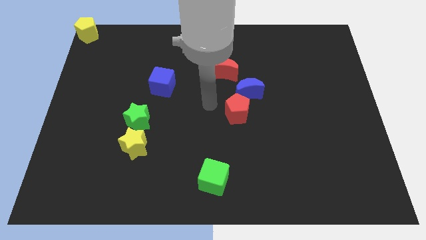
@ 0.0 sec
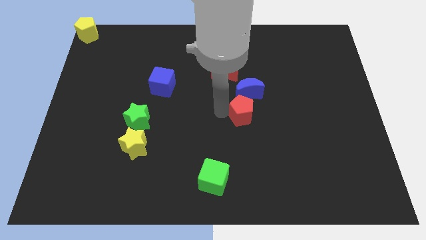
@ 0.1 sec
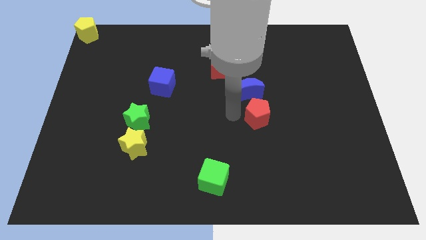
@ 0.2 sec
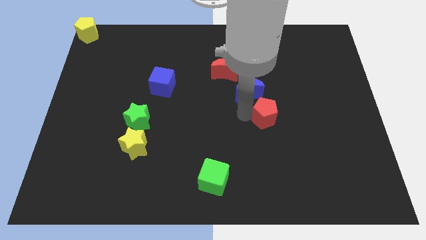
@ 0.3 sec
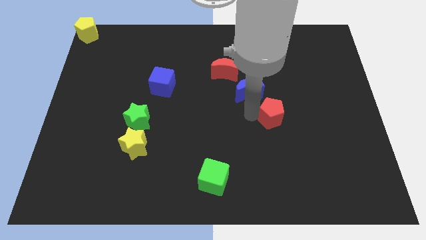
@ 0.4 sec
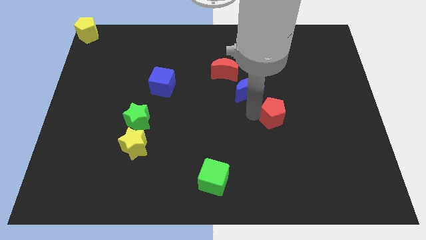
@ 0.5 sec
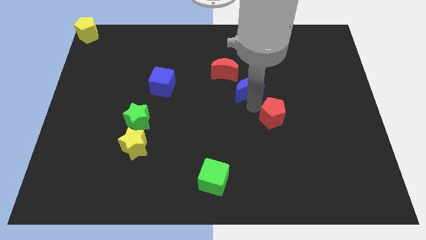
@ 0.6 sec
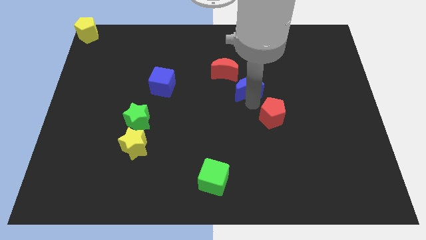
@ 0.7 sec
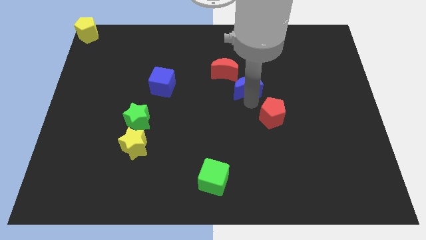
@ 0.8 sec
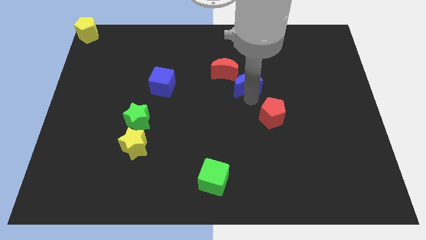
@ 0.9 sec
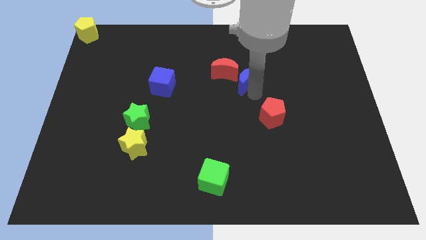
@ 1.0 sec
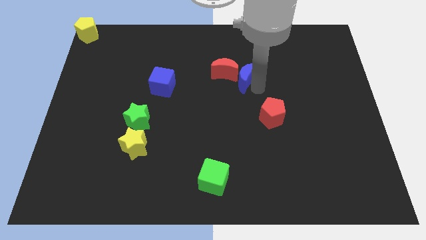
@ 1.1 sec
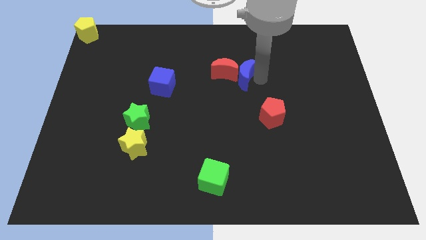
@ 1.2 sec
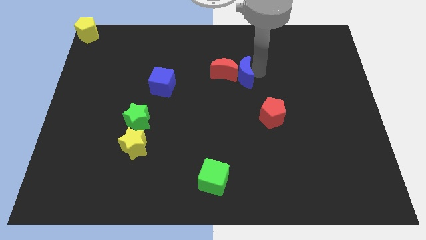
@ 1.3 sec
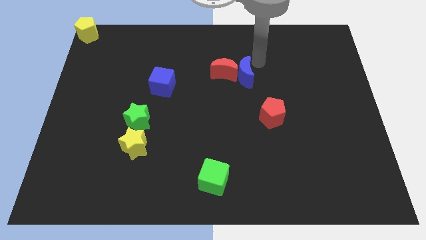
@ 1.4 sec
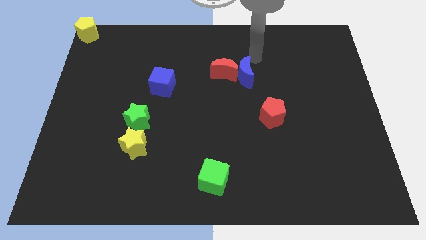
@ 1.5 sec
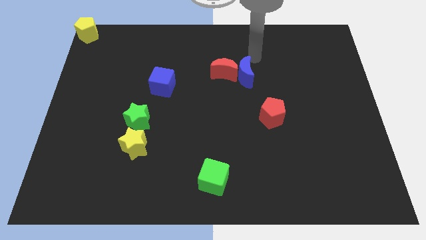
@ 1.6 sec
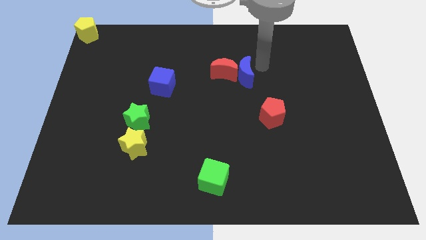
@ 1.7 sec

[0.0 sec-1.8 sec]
push blue crescent slightly towards red crescent

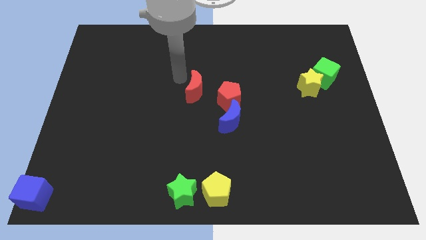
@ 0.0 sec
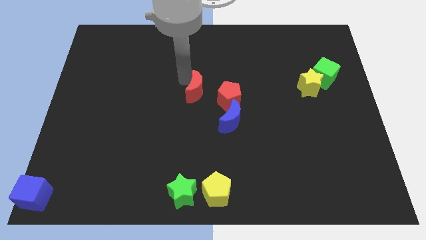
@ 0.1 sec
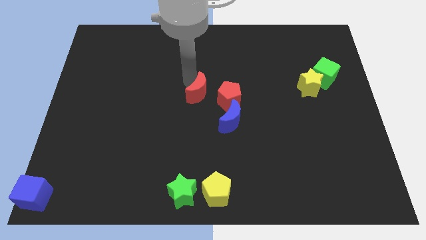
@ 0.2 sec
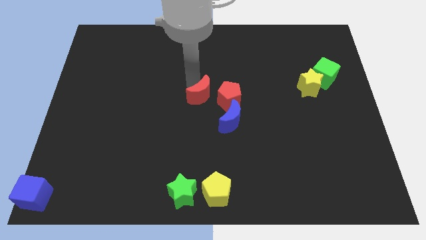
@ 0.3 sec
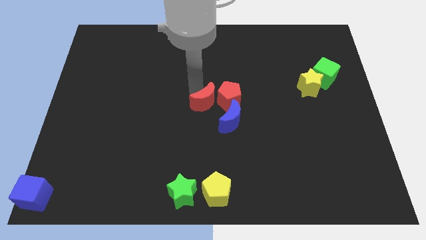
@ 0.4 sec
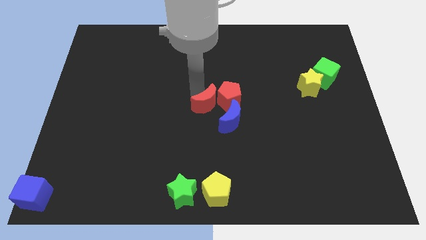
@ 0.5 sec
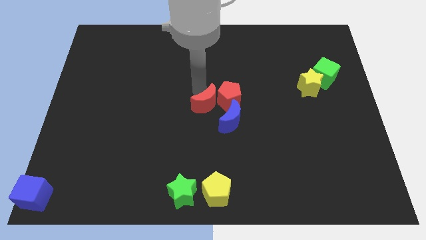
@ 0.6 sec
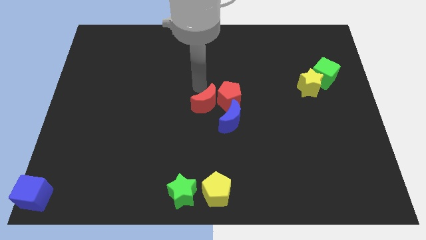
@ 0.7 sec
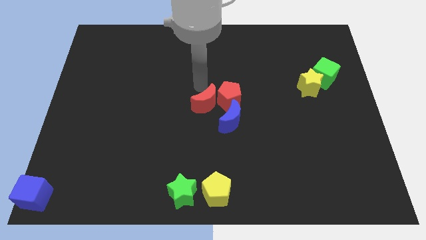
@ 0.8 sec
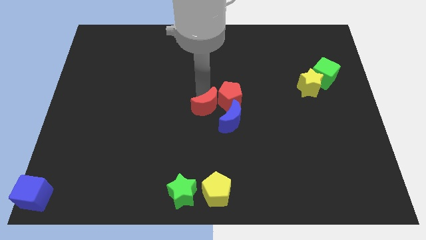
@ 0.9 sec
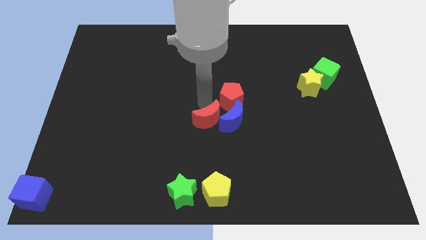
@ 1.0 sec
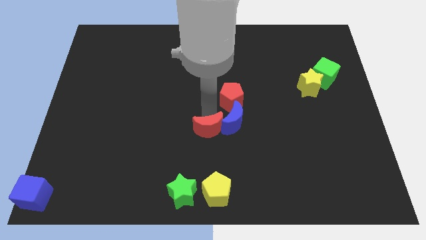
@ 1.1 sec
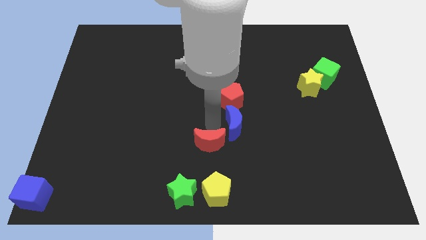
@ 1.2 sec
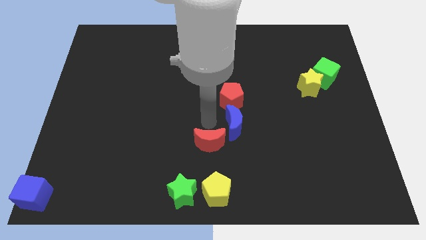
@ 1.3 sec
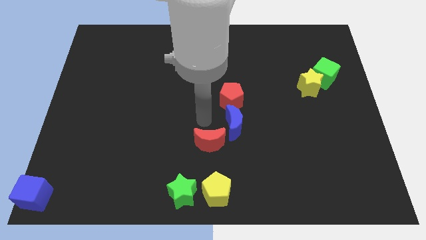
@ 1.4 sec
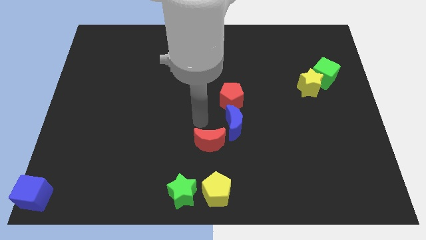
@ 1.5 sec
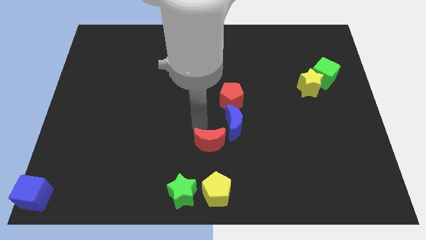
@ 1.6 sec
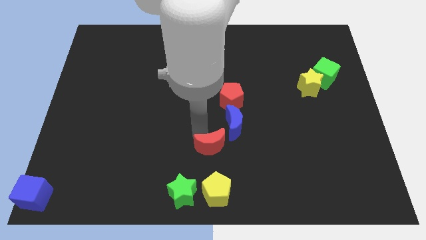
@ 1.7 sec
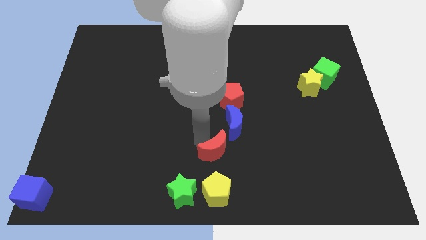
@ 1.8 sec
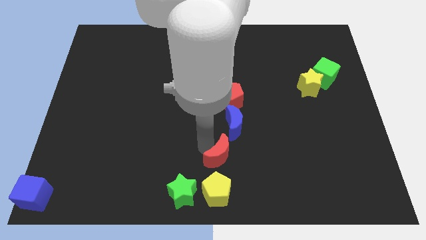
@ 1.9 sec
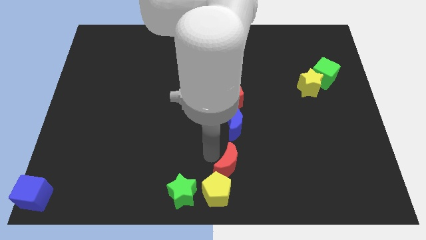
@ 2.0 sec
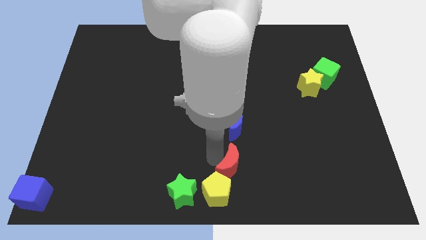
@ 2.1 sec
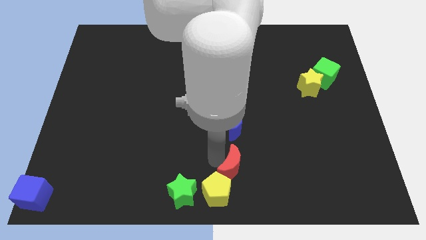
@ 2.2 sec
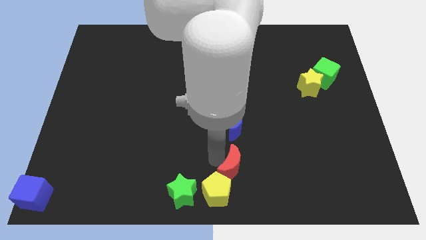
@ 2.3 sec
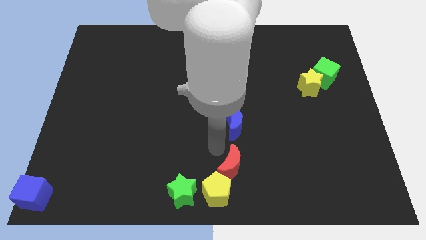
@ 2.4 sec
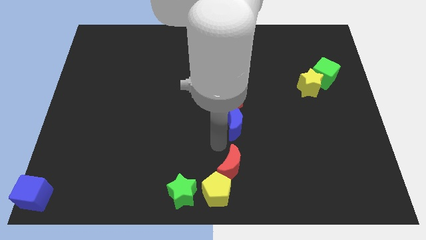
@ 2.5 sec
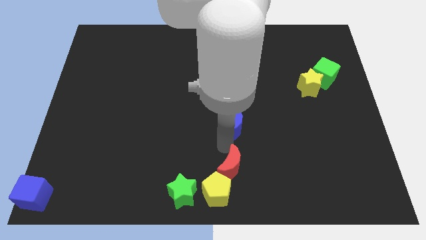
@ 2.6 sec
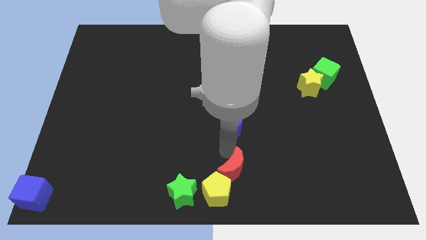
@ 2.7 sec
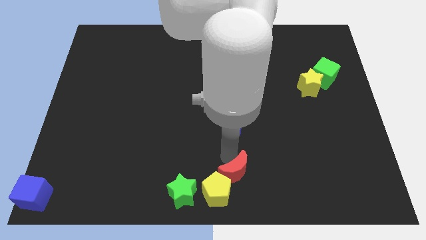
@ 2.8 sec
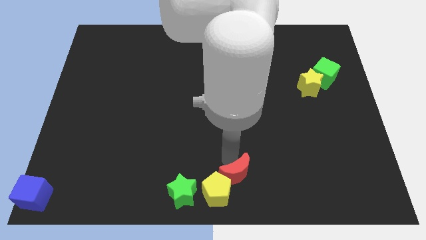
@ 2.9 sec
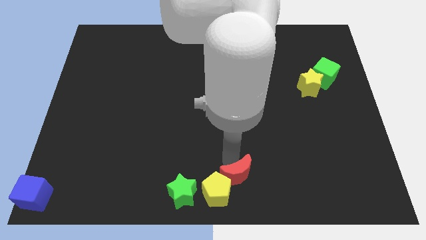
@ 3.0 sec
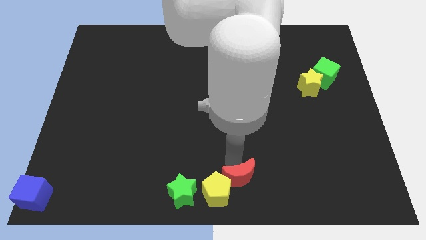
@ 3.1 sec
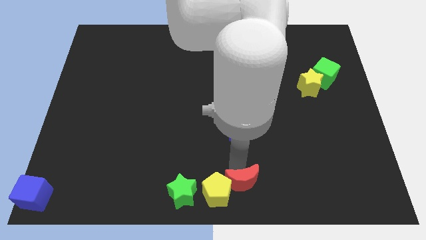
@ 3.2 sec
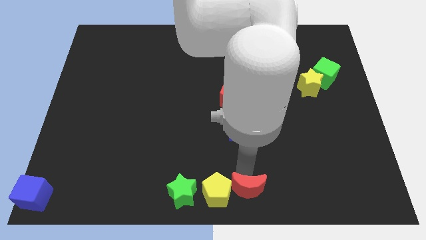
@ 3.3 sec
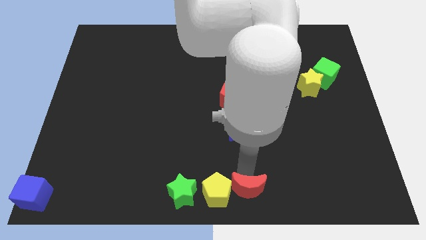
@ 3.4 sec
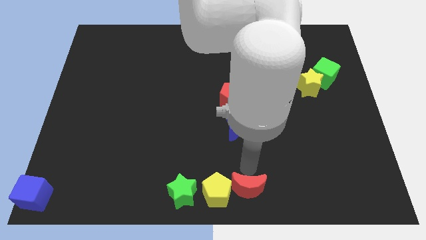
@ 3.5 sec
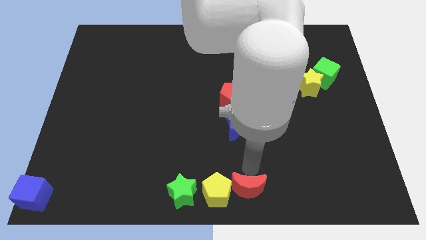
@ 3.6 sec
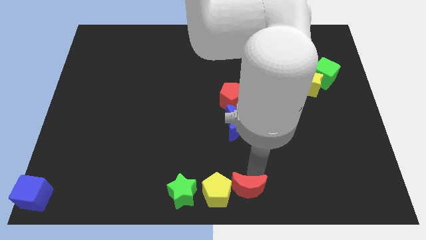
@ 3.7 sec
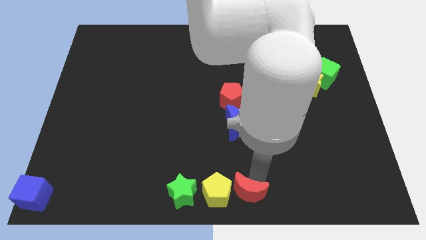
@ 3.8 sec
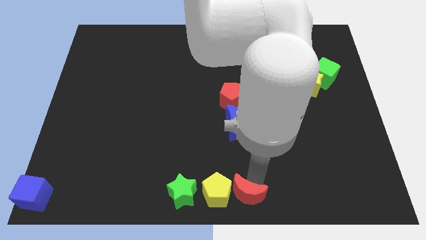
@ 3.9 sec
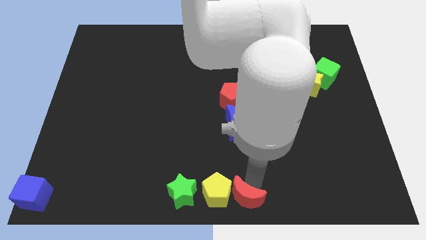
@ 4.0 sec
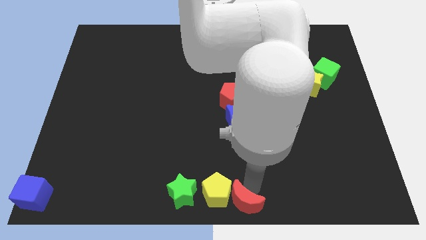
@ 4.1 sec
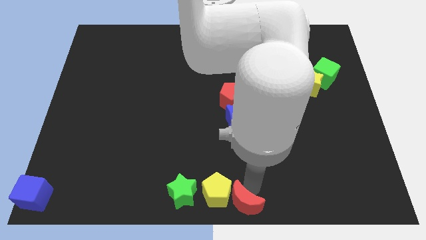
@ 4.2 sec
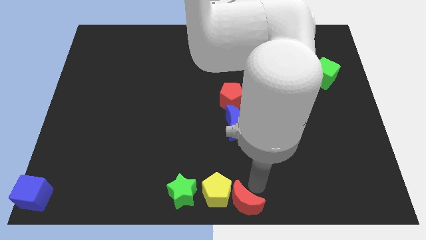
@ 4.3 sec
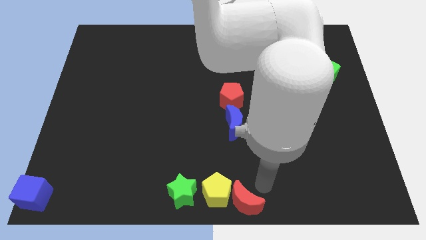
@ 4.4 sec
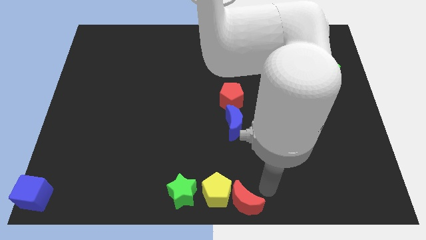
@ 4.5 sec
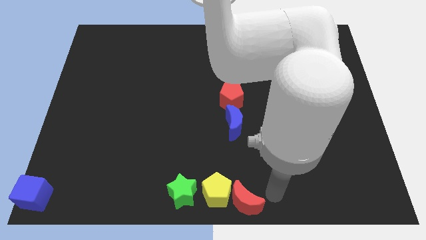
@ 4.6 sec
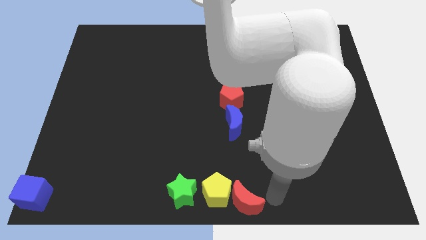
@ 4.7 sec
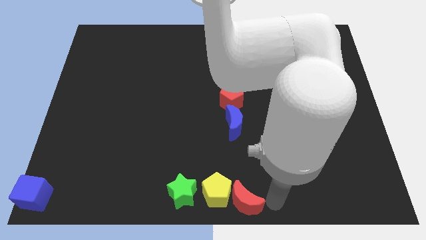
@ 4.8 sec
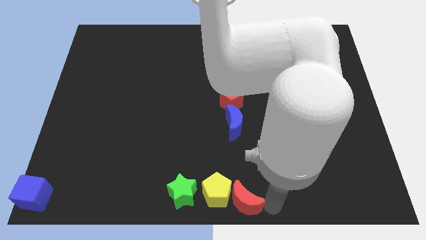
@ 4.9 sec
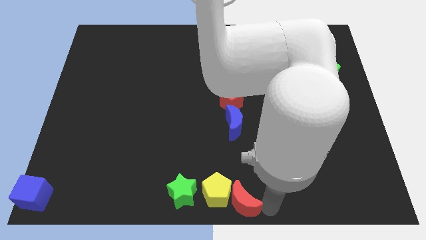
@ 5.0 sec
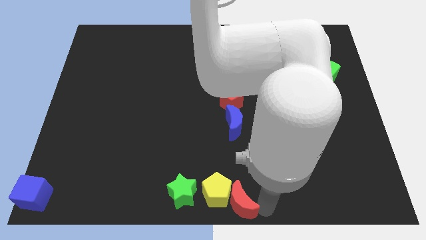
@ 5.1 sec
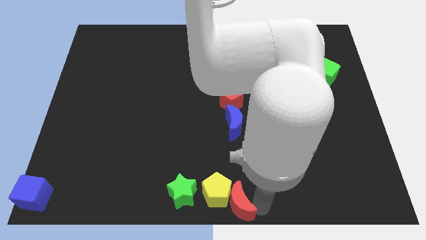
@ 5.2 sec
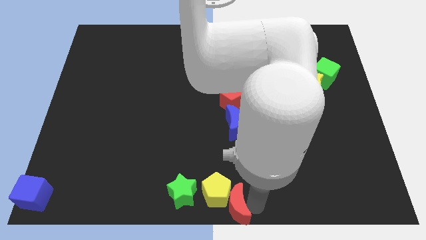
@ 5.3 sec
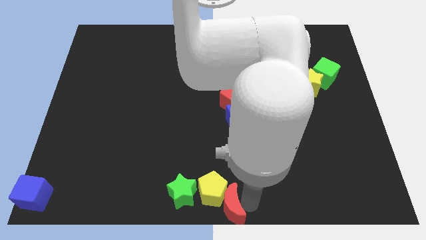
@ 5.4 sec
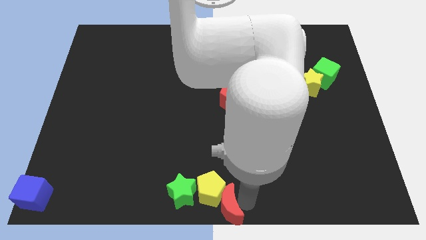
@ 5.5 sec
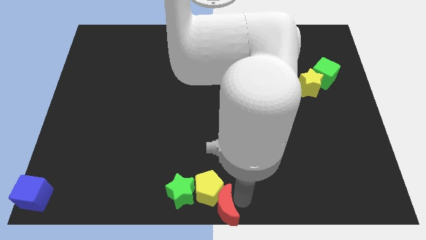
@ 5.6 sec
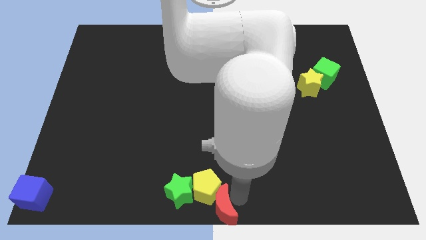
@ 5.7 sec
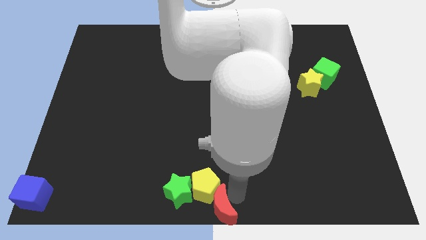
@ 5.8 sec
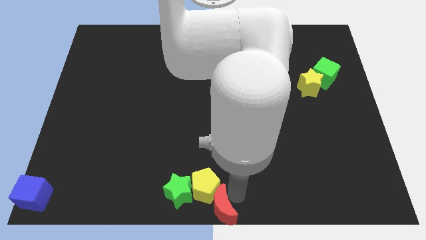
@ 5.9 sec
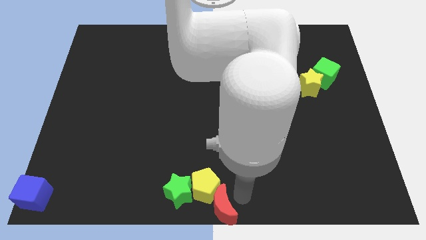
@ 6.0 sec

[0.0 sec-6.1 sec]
slide the red crescent towards the bottom center of the board

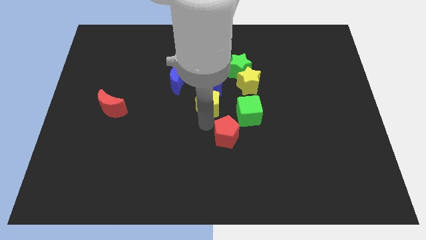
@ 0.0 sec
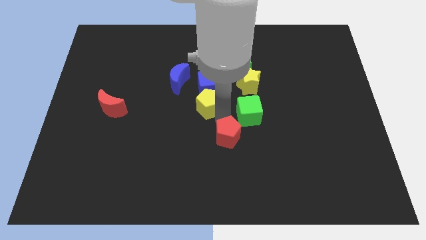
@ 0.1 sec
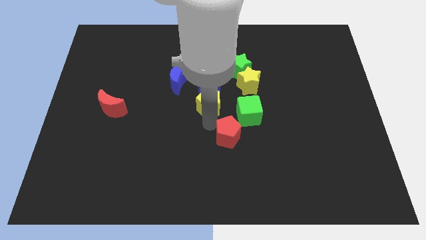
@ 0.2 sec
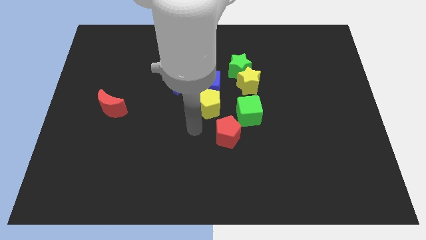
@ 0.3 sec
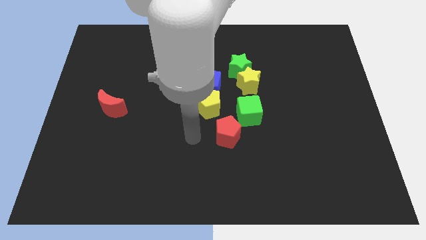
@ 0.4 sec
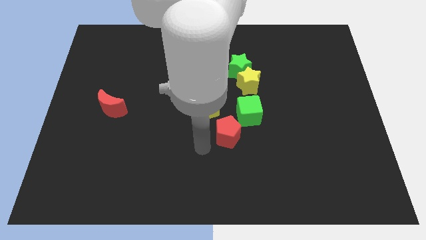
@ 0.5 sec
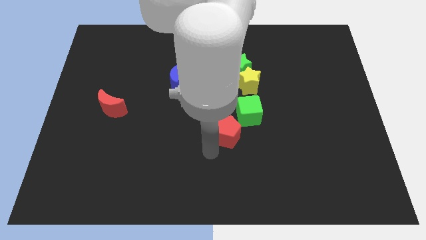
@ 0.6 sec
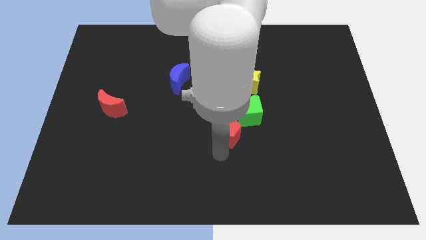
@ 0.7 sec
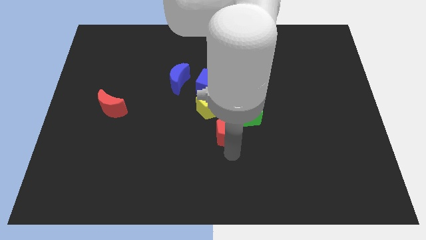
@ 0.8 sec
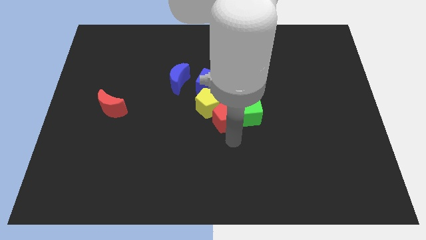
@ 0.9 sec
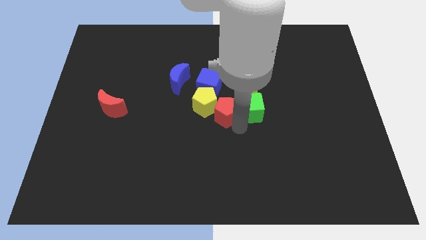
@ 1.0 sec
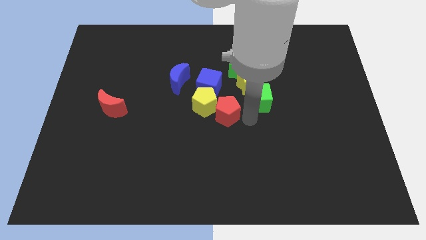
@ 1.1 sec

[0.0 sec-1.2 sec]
move red pentagon into the group of blocks
